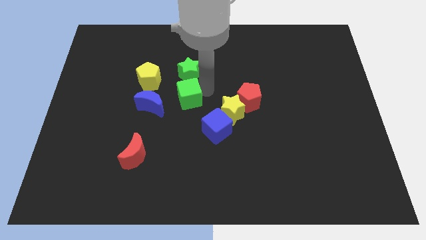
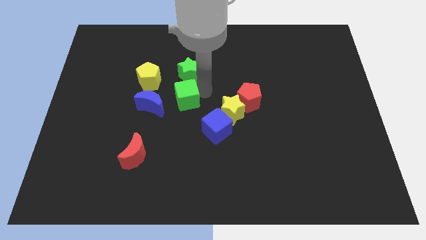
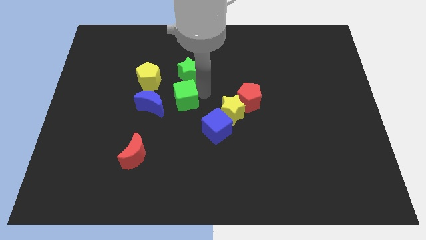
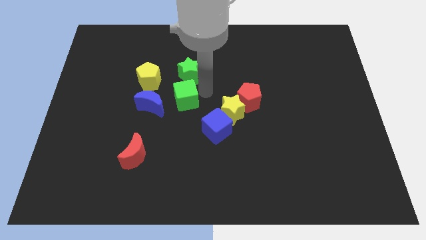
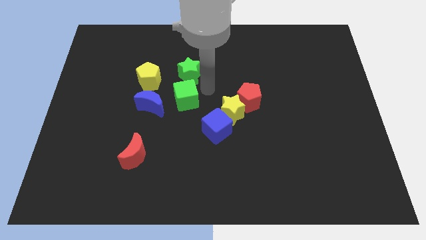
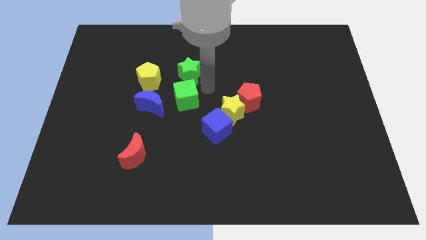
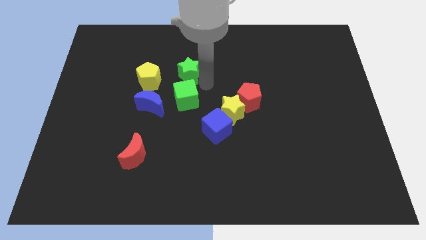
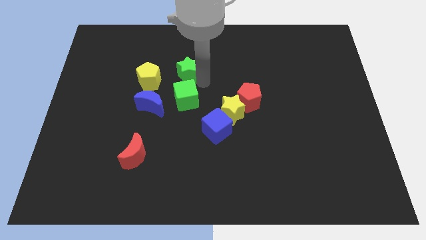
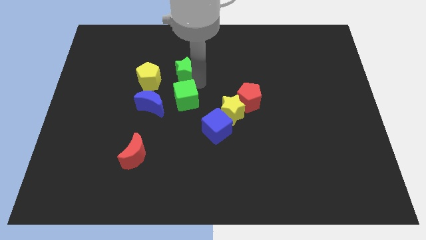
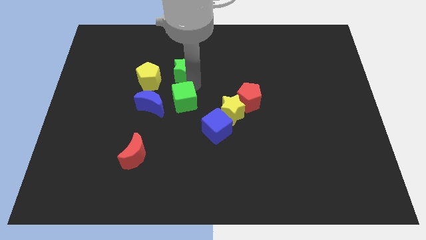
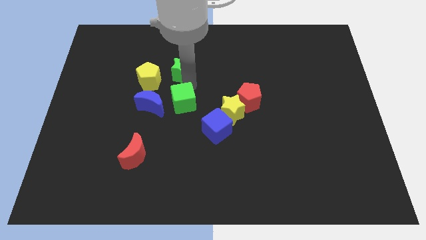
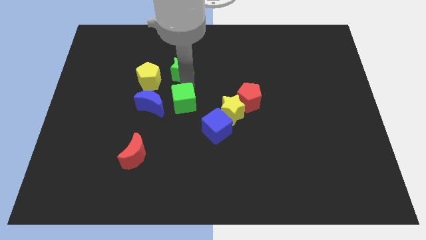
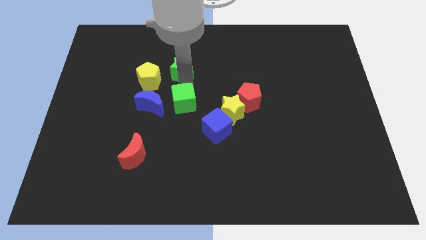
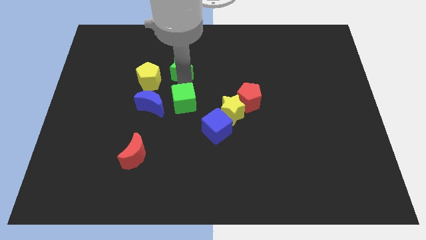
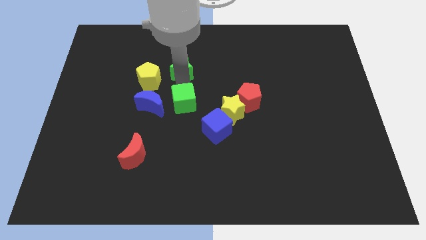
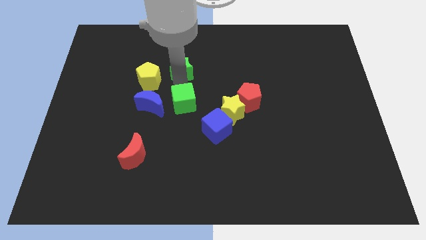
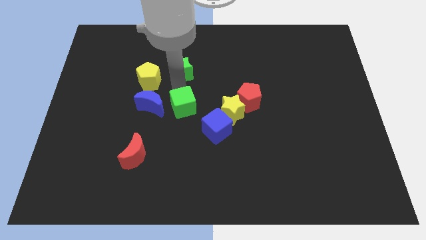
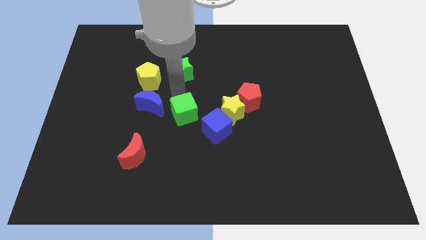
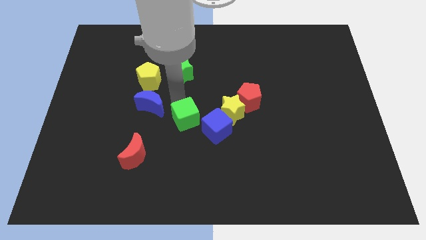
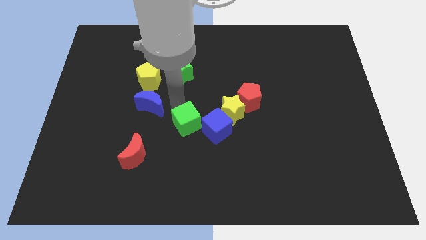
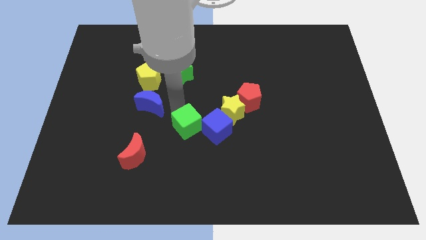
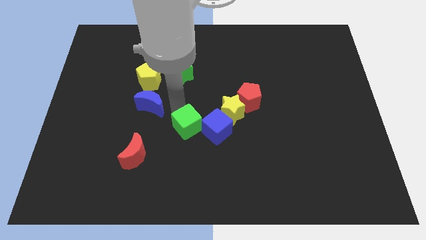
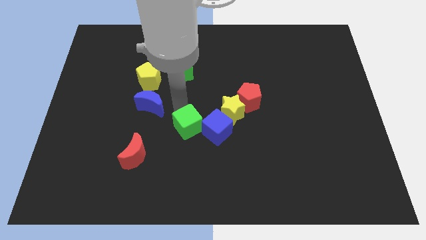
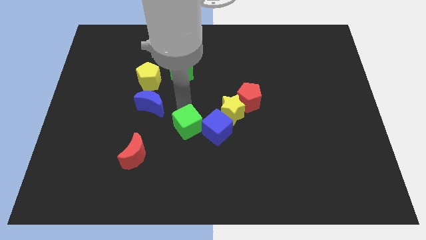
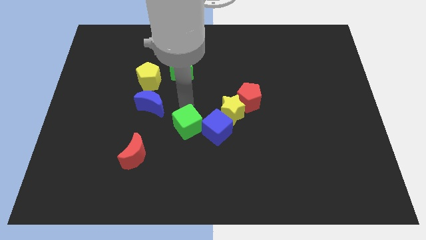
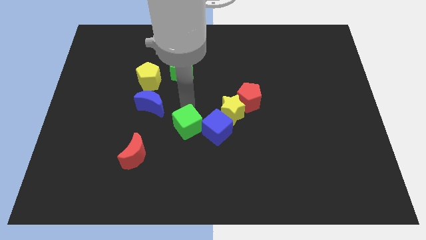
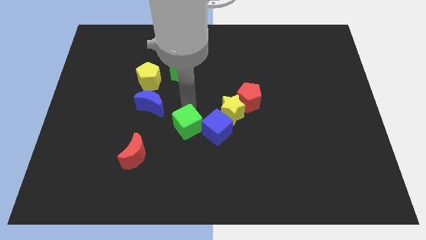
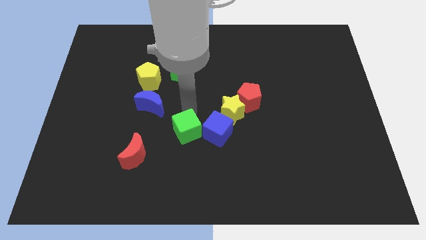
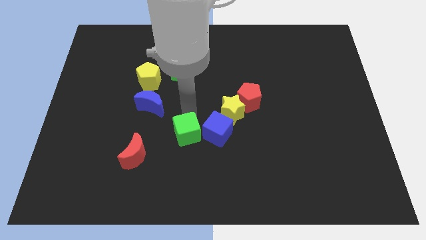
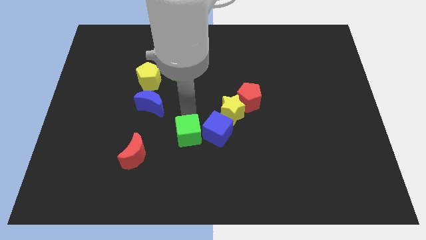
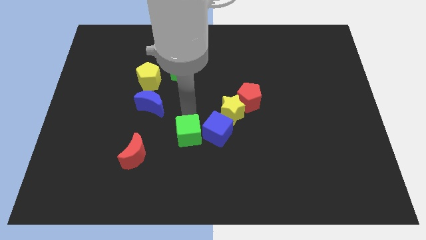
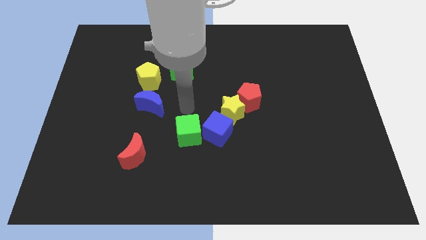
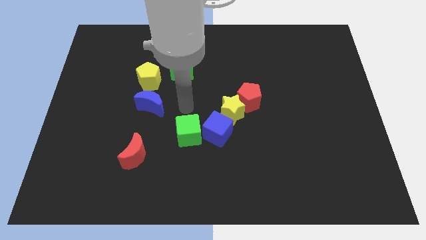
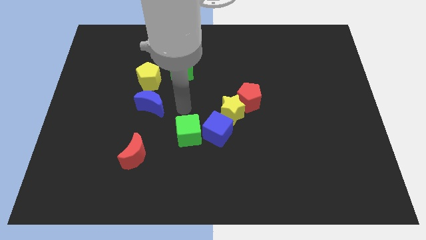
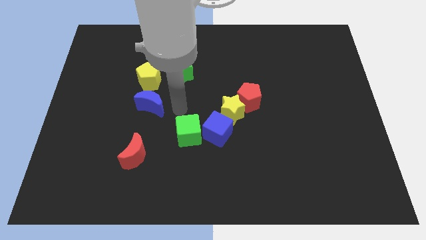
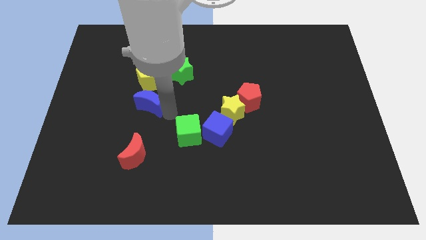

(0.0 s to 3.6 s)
move the green cube left to the blue cube

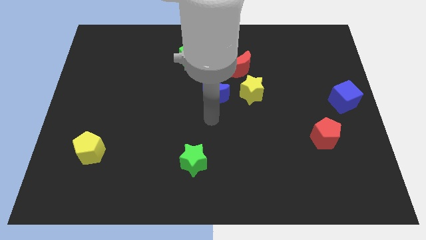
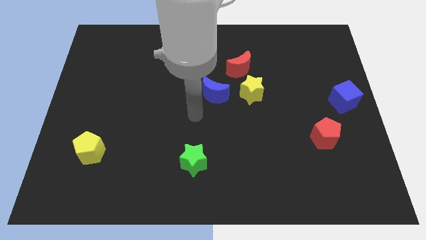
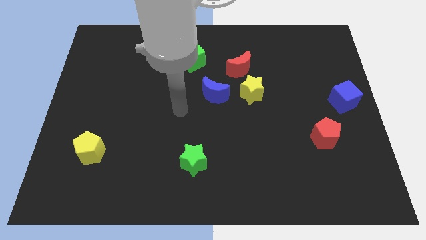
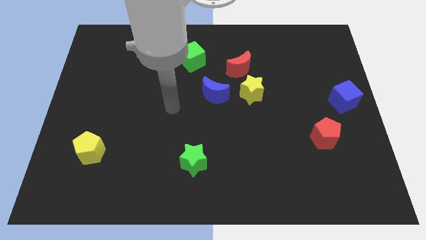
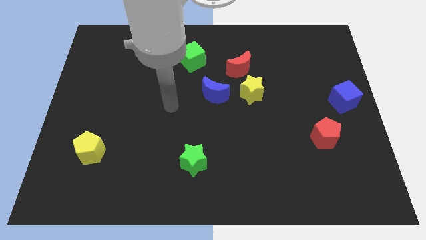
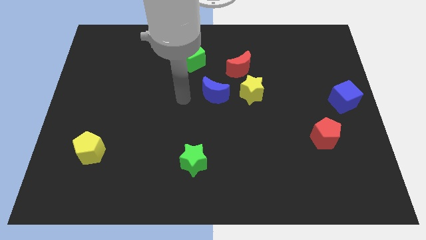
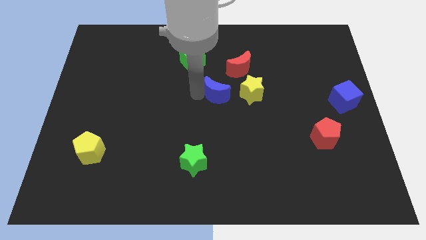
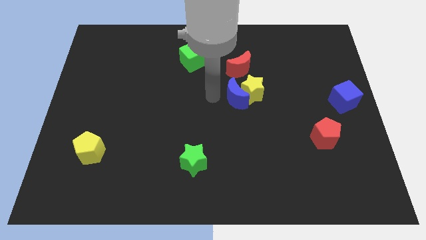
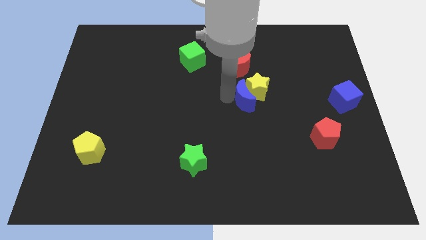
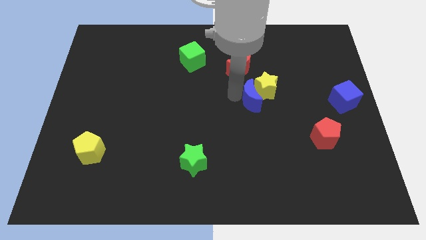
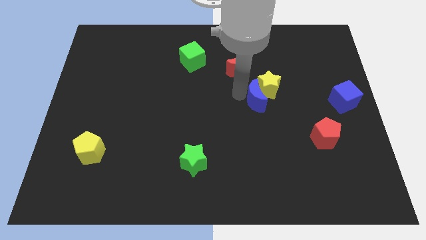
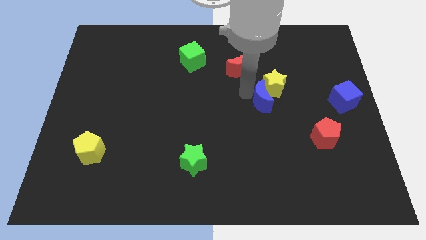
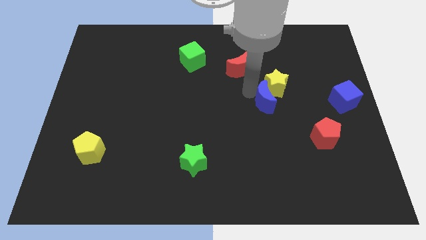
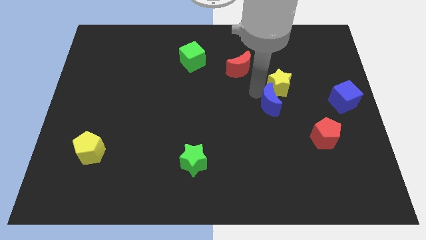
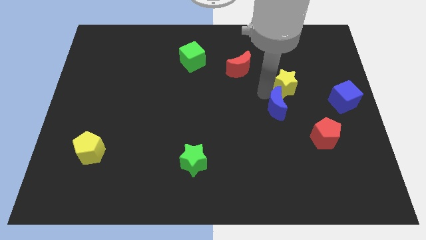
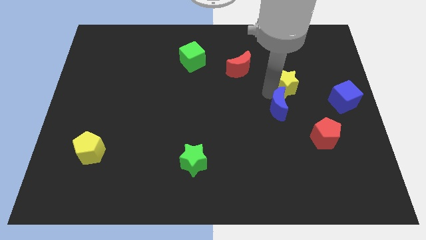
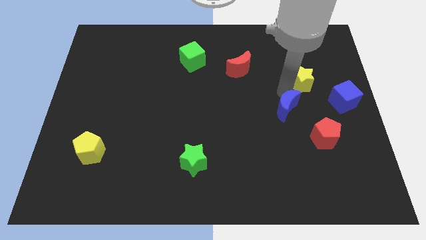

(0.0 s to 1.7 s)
push the yellow star and blue moon to the right

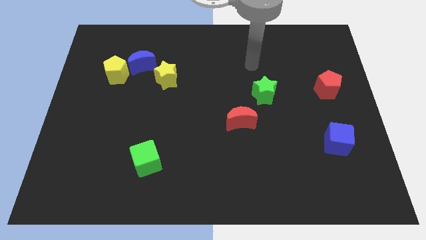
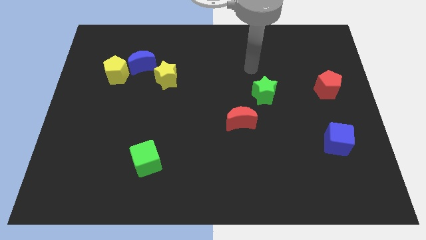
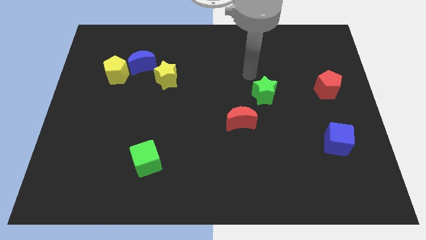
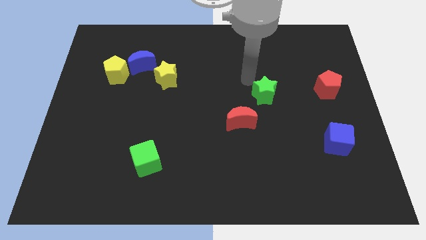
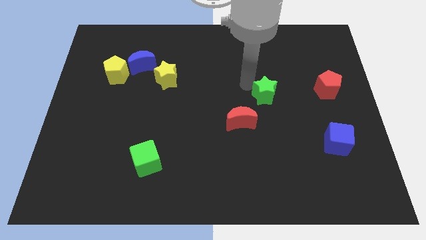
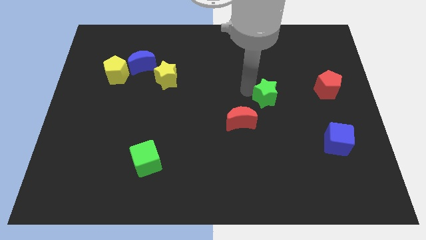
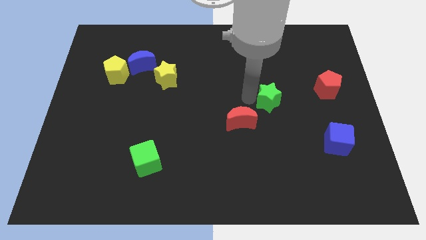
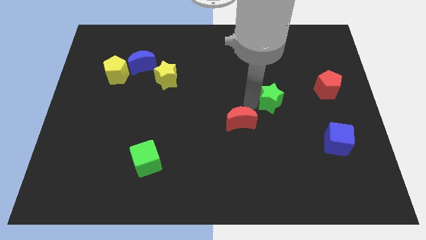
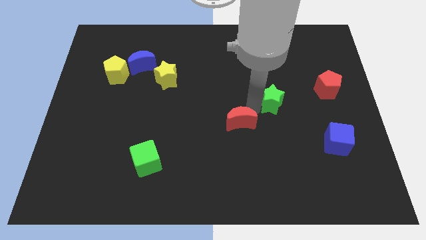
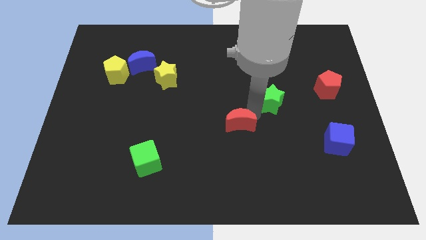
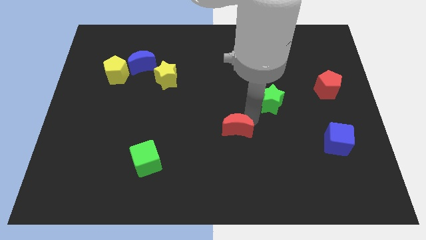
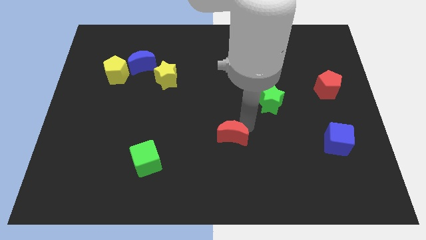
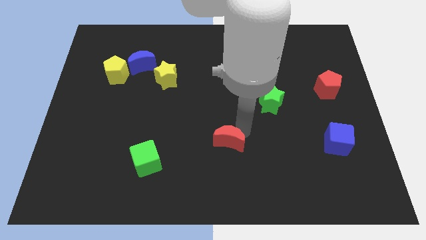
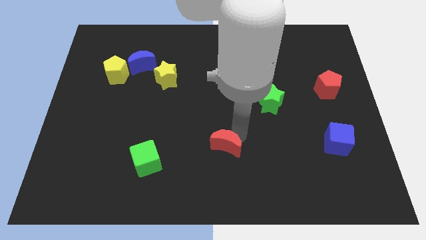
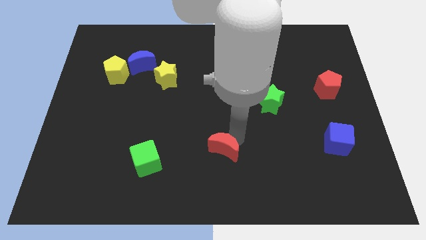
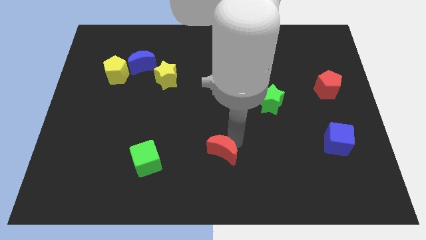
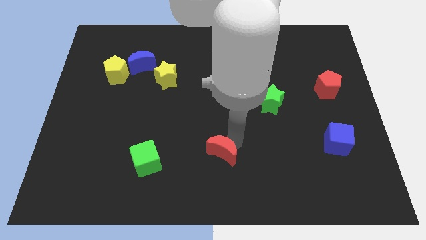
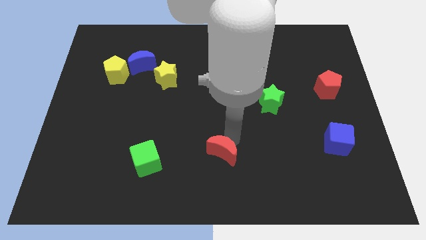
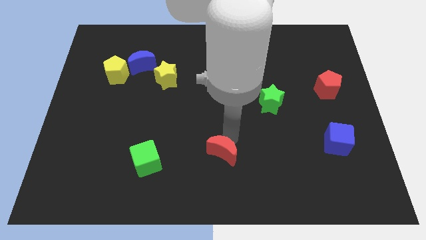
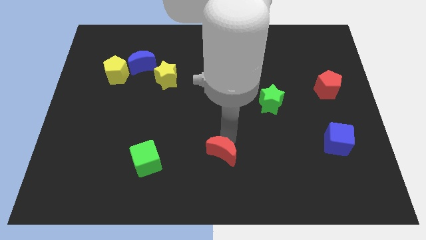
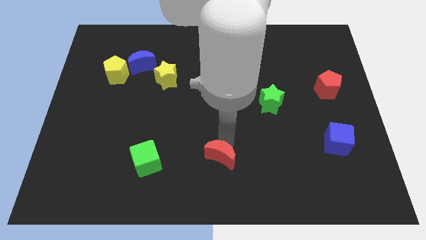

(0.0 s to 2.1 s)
push the red crescent downwards on the board

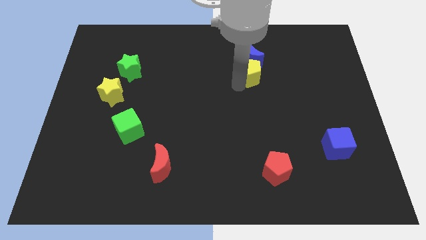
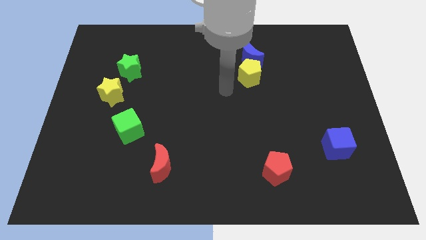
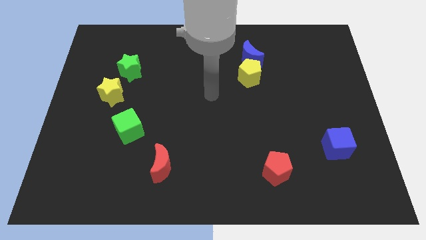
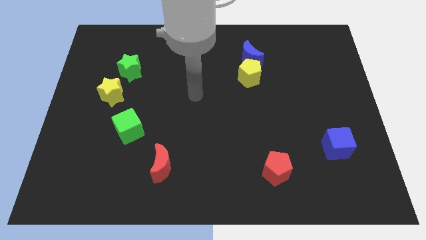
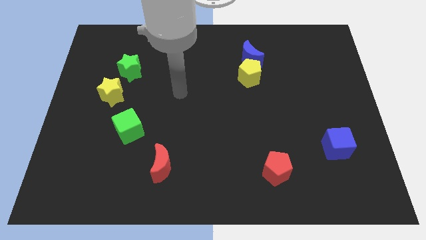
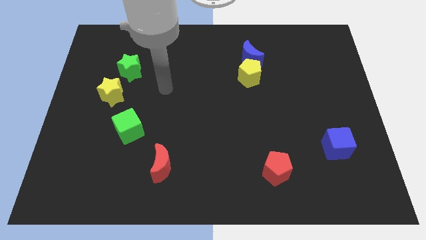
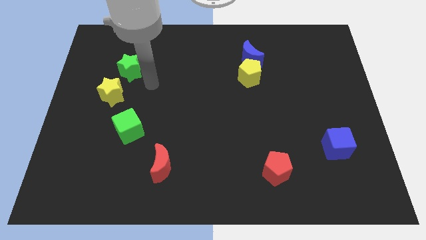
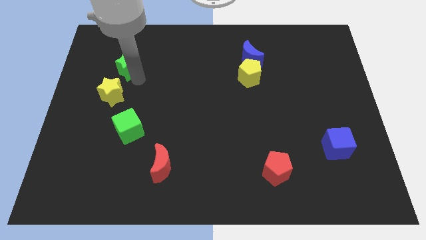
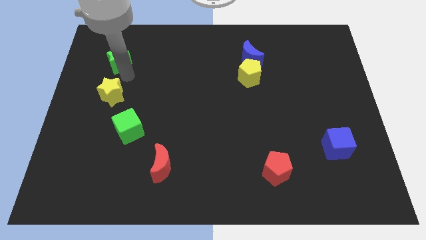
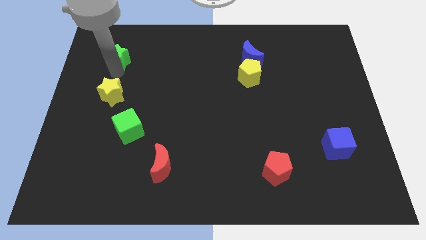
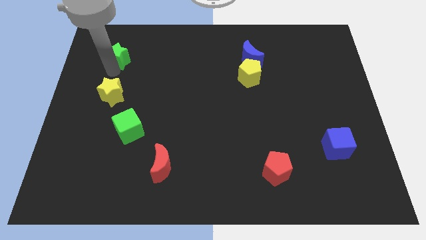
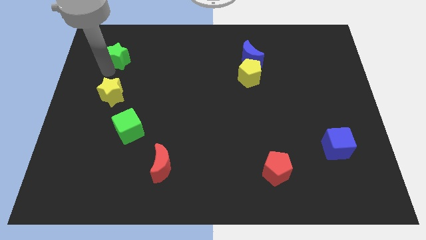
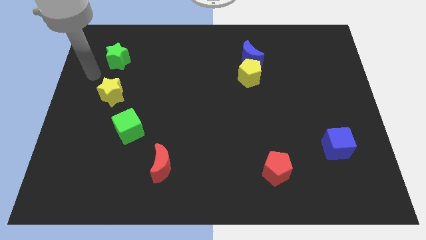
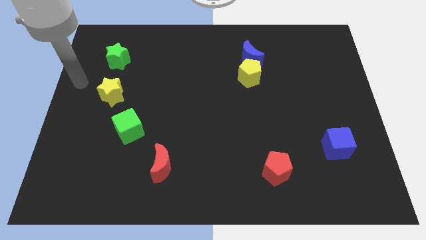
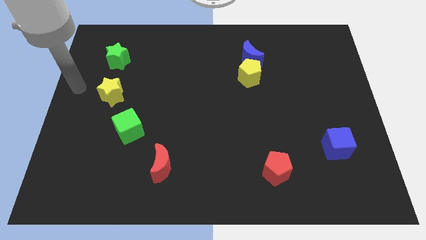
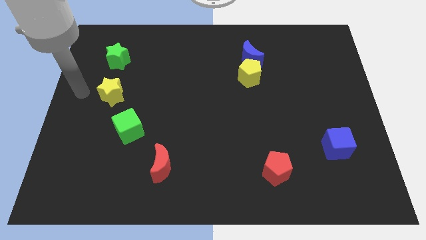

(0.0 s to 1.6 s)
move the green star slightly towards the top left of the board

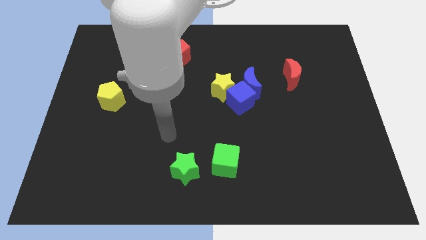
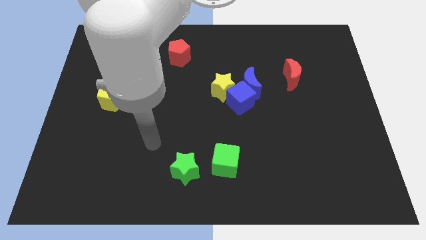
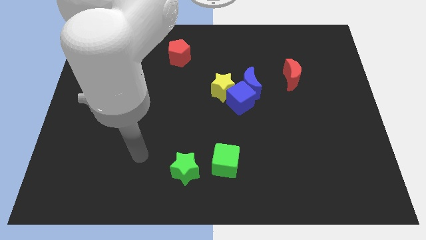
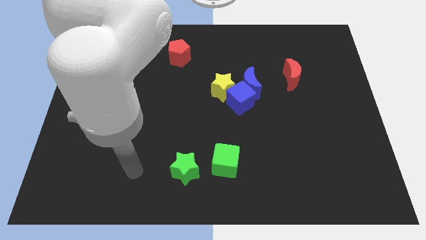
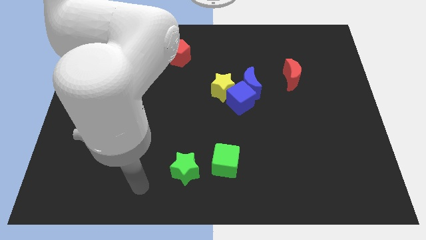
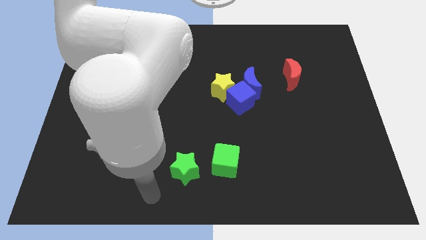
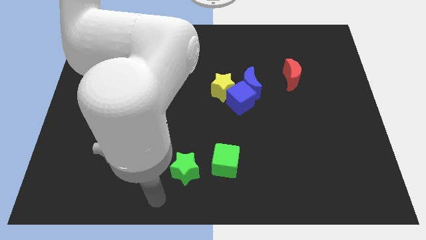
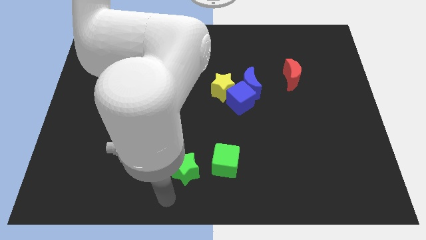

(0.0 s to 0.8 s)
move your hand near to the green star
